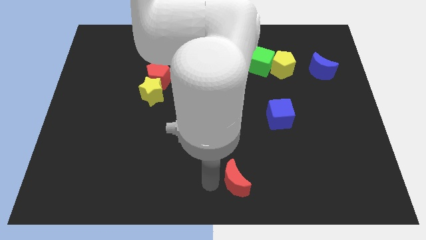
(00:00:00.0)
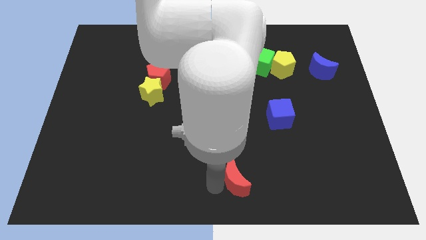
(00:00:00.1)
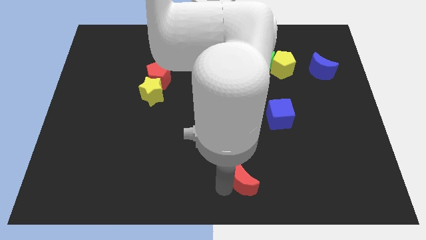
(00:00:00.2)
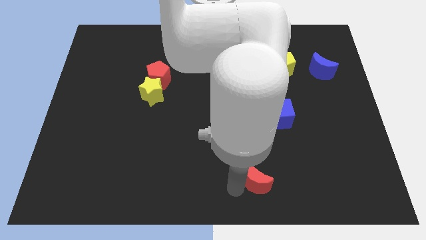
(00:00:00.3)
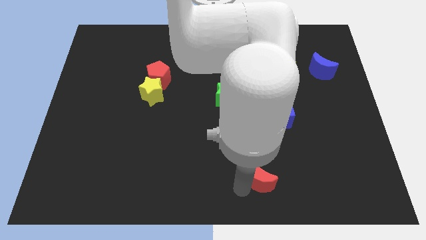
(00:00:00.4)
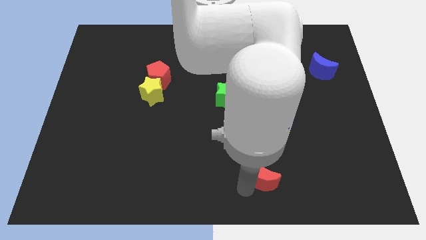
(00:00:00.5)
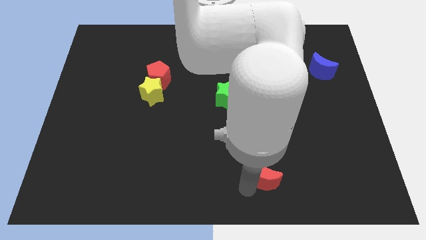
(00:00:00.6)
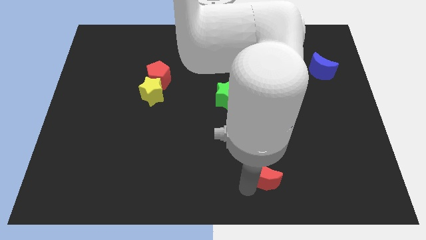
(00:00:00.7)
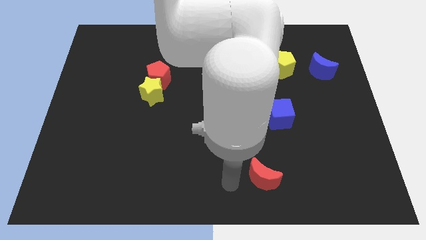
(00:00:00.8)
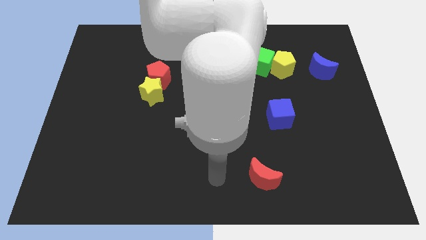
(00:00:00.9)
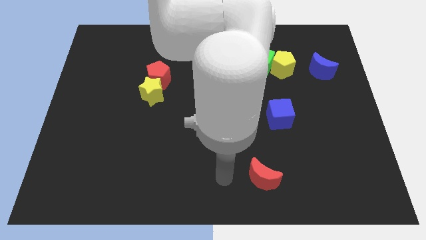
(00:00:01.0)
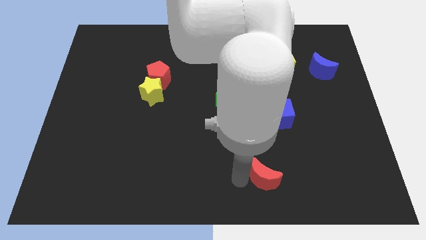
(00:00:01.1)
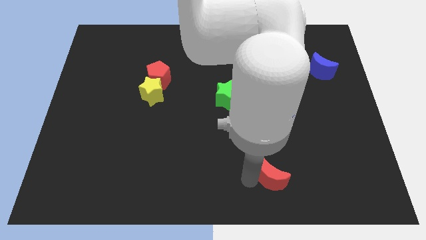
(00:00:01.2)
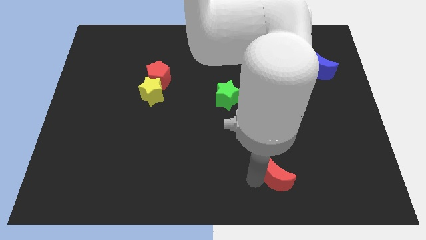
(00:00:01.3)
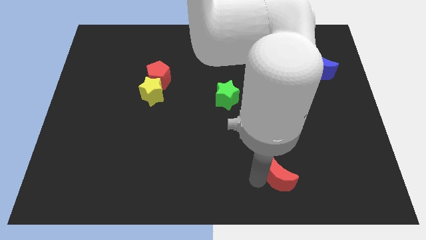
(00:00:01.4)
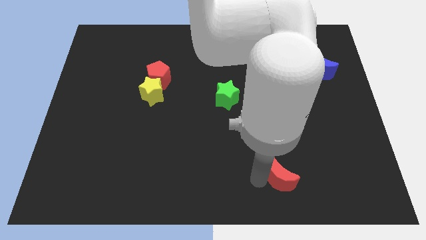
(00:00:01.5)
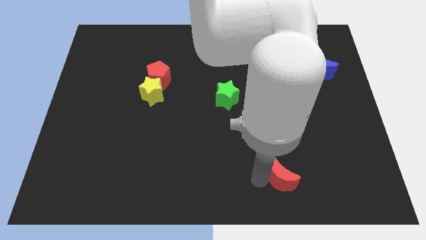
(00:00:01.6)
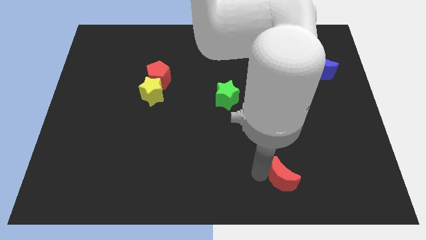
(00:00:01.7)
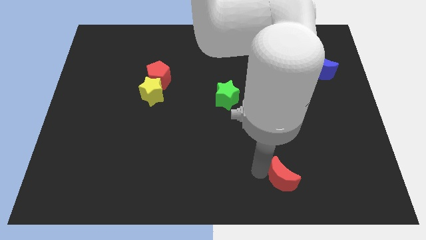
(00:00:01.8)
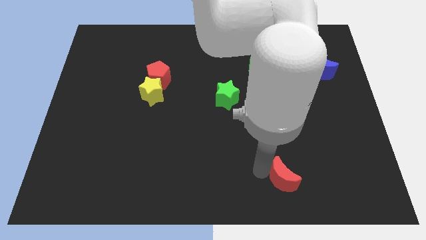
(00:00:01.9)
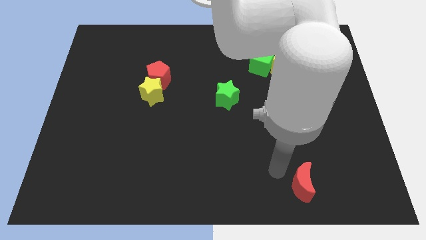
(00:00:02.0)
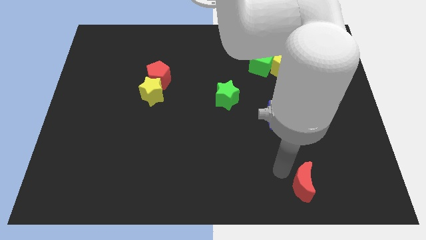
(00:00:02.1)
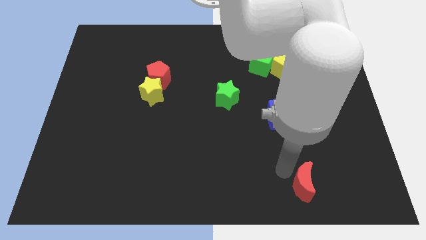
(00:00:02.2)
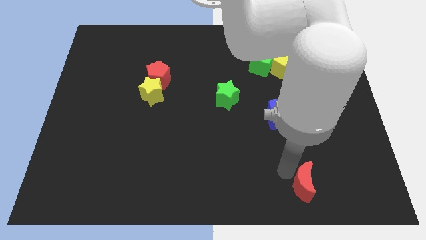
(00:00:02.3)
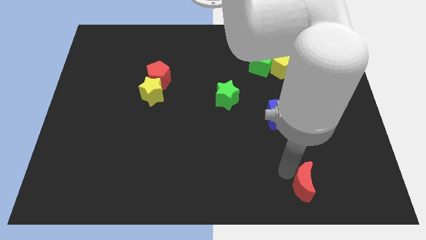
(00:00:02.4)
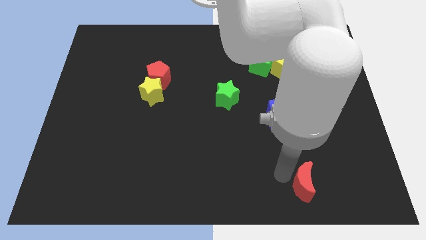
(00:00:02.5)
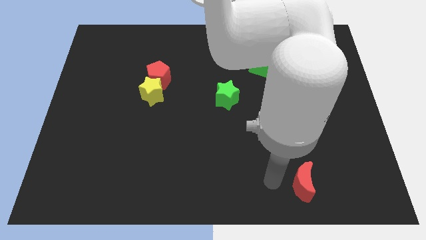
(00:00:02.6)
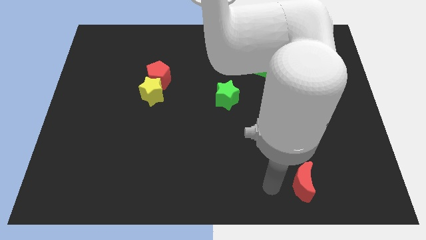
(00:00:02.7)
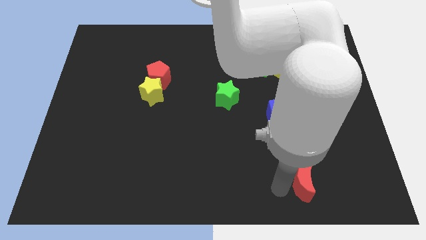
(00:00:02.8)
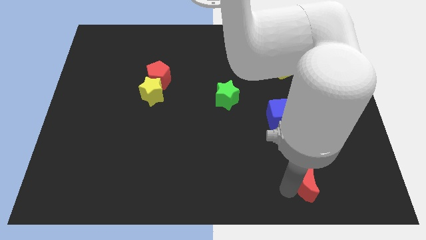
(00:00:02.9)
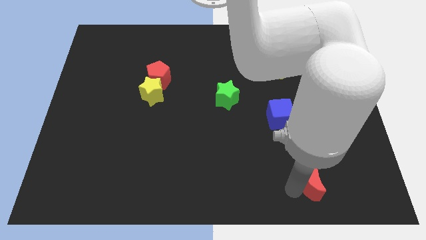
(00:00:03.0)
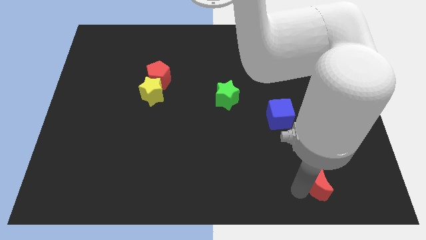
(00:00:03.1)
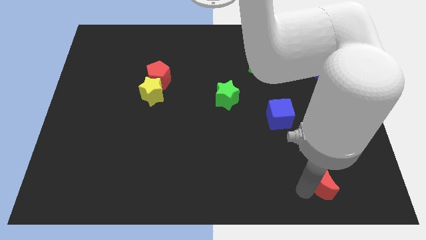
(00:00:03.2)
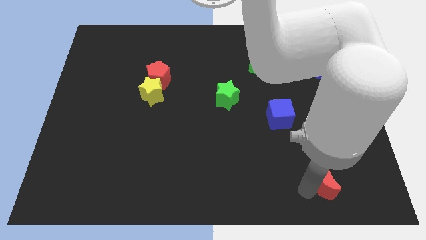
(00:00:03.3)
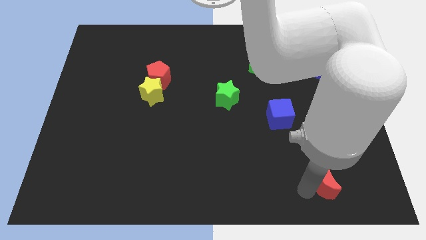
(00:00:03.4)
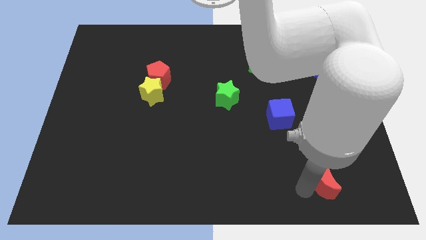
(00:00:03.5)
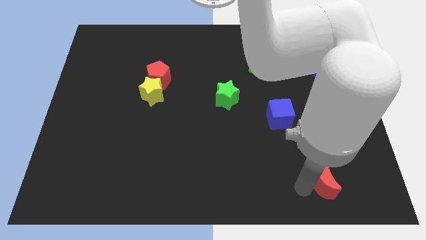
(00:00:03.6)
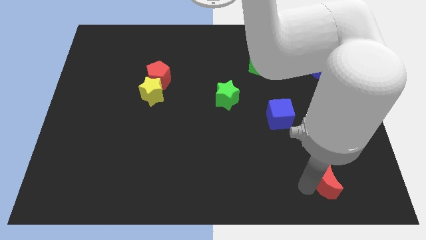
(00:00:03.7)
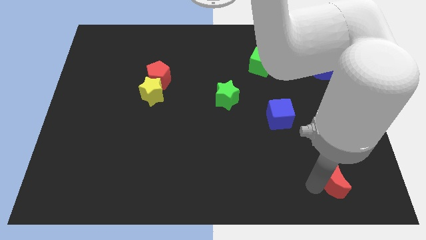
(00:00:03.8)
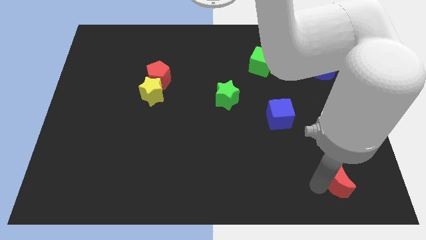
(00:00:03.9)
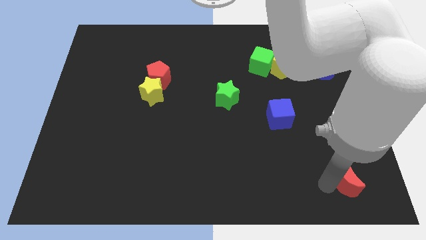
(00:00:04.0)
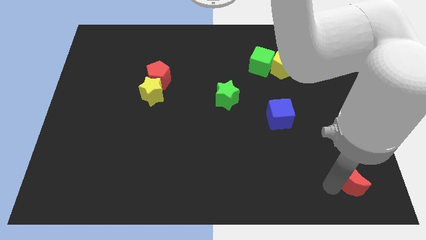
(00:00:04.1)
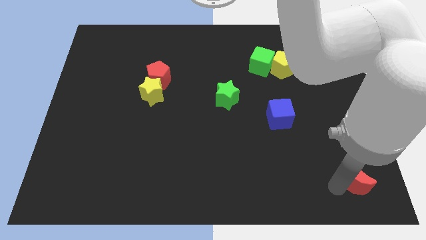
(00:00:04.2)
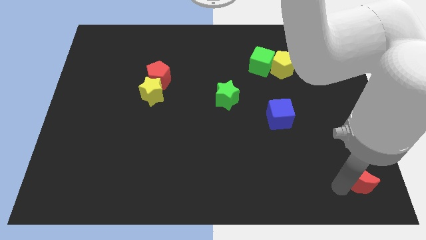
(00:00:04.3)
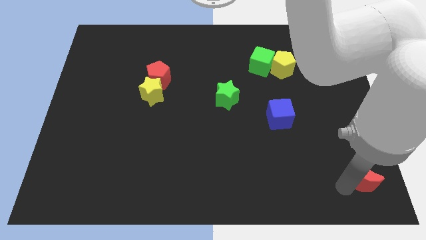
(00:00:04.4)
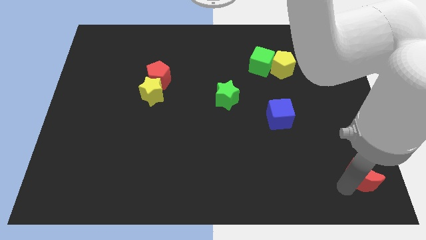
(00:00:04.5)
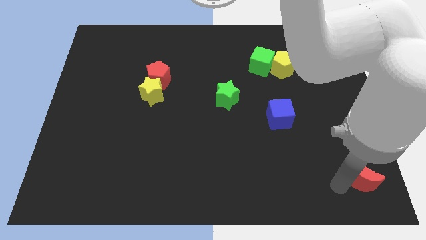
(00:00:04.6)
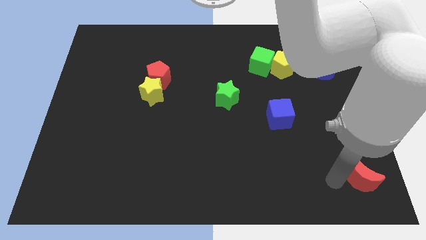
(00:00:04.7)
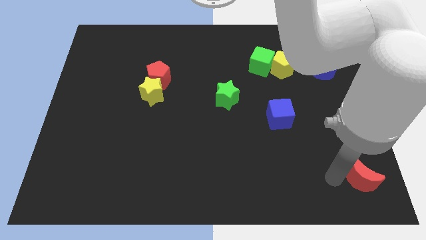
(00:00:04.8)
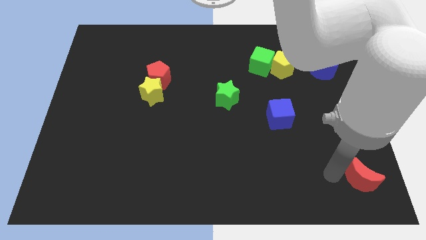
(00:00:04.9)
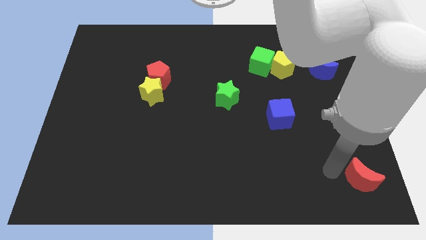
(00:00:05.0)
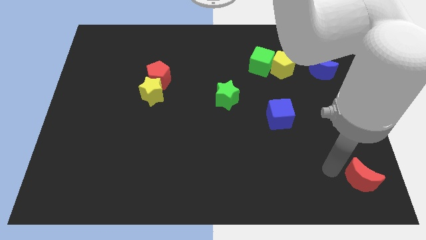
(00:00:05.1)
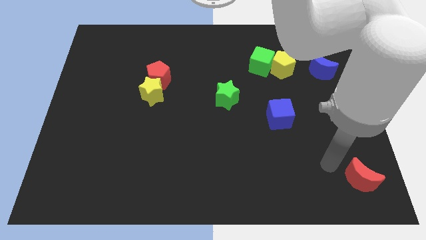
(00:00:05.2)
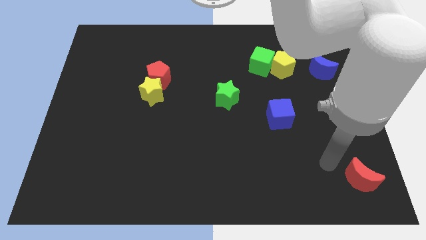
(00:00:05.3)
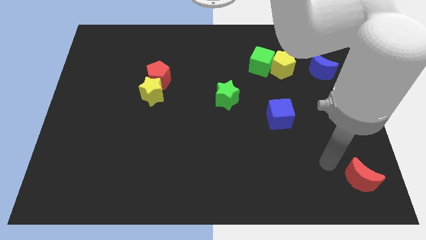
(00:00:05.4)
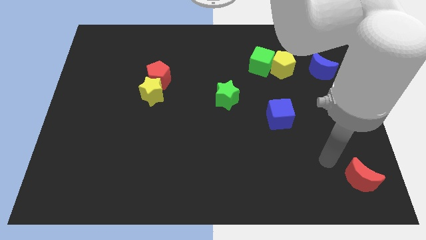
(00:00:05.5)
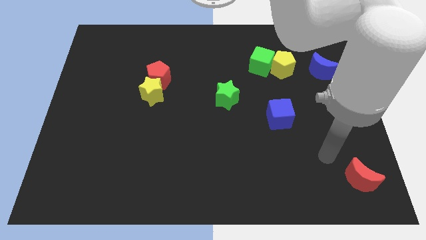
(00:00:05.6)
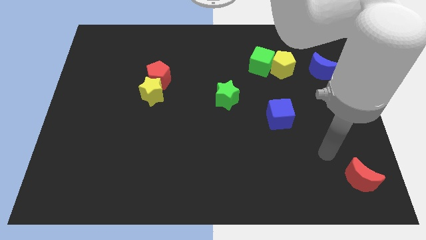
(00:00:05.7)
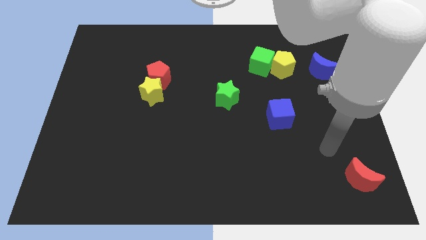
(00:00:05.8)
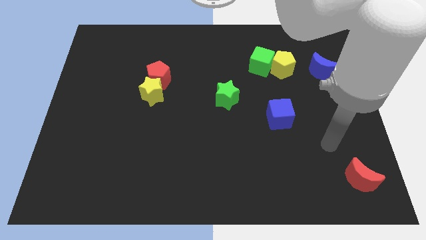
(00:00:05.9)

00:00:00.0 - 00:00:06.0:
move red moon towards the bottom right

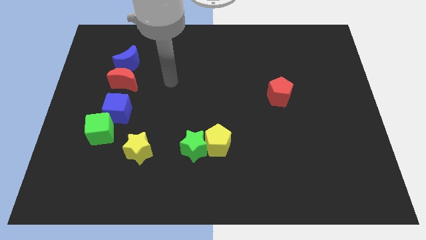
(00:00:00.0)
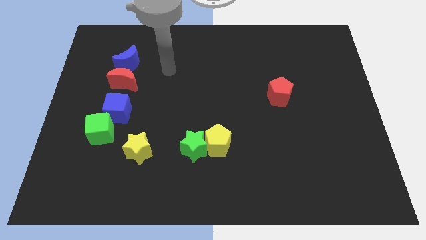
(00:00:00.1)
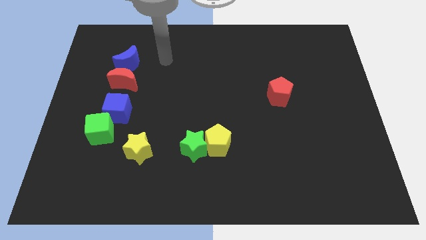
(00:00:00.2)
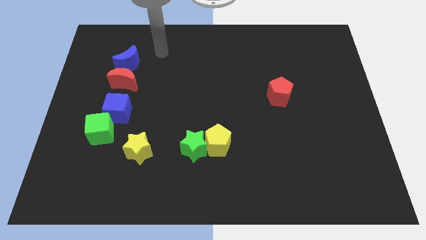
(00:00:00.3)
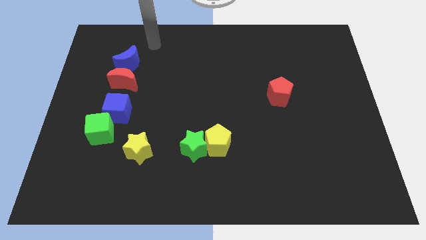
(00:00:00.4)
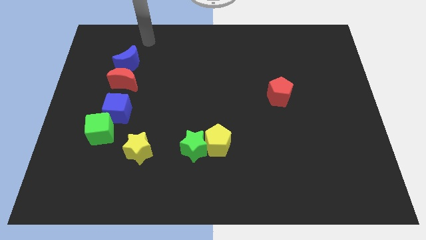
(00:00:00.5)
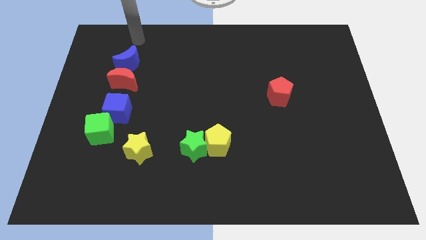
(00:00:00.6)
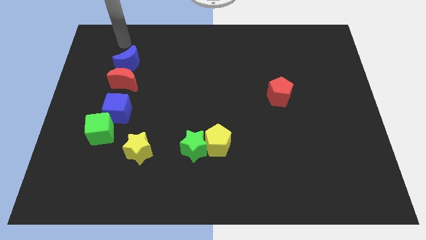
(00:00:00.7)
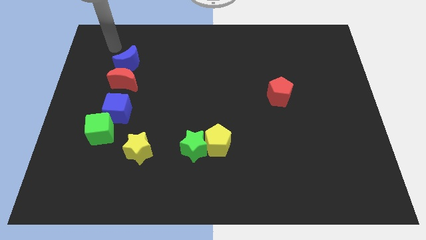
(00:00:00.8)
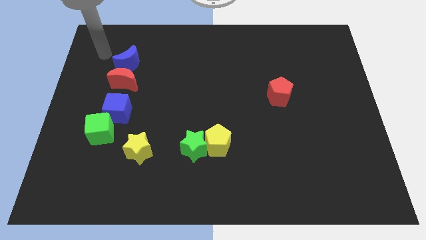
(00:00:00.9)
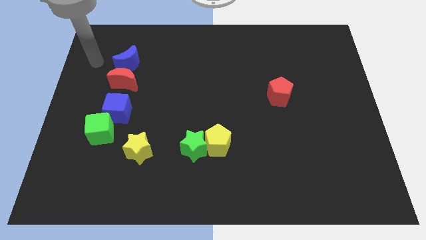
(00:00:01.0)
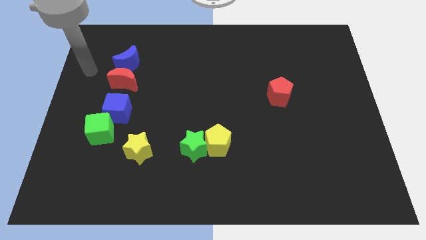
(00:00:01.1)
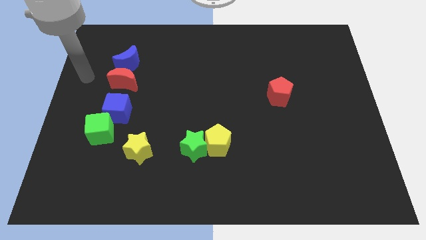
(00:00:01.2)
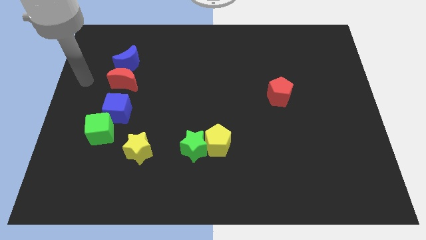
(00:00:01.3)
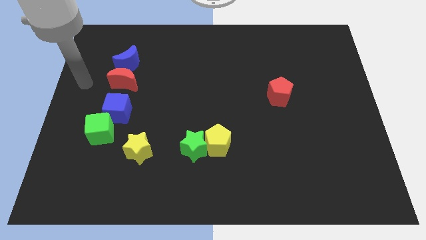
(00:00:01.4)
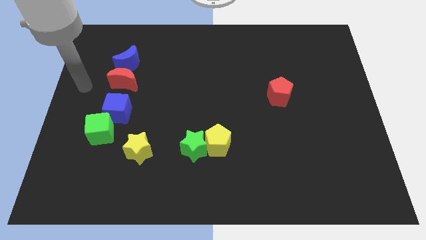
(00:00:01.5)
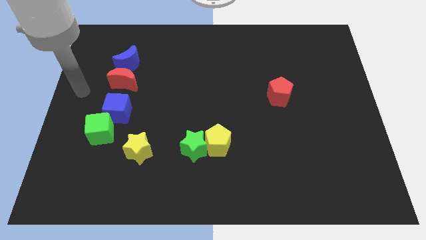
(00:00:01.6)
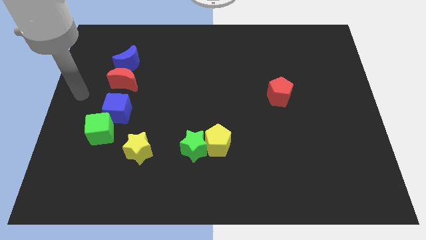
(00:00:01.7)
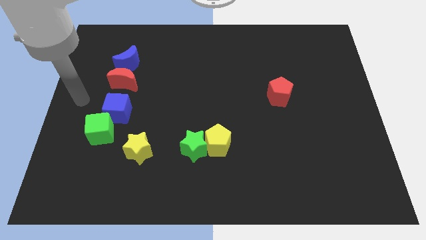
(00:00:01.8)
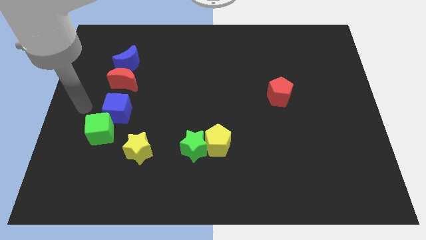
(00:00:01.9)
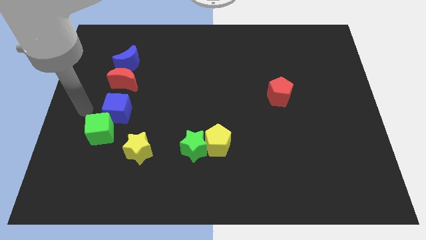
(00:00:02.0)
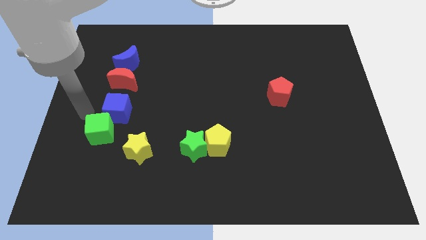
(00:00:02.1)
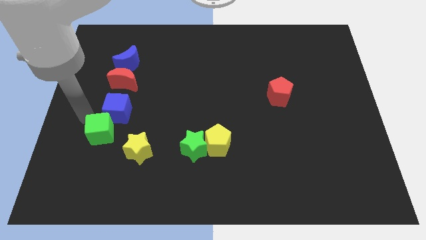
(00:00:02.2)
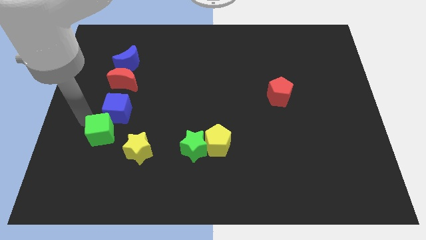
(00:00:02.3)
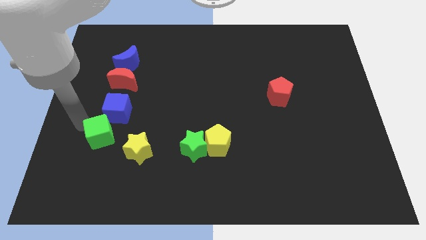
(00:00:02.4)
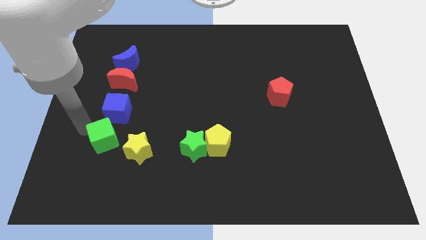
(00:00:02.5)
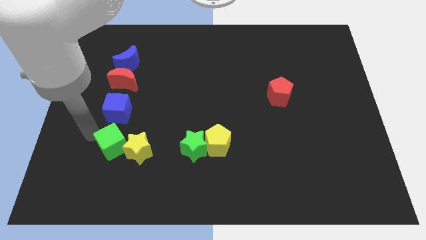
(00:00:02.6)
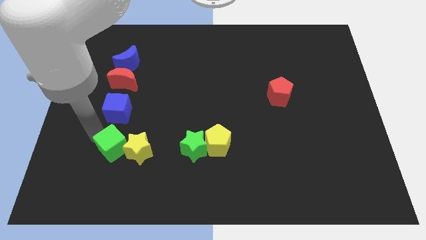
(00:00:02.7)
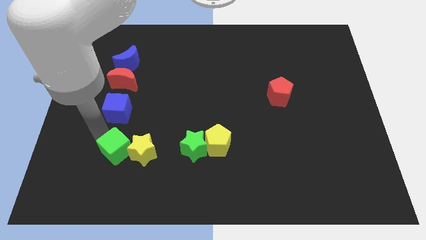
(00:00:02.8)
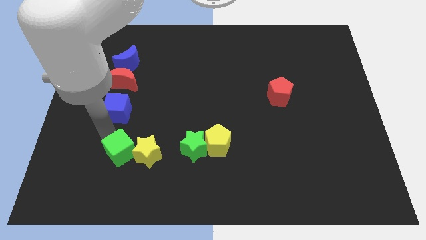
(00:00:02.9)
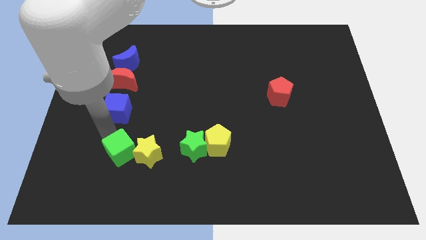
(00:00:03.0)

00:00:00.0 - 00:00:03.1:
drag green cube into the left side of the yellow star
